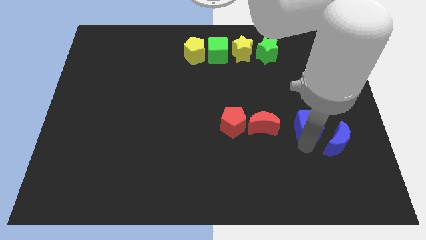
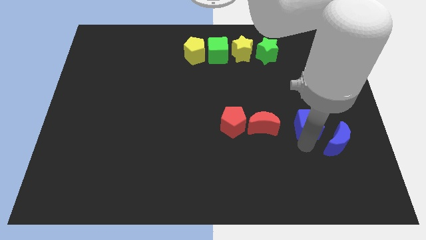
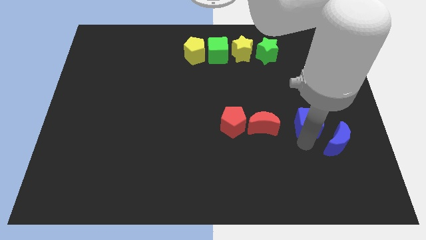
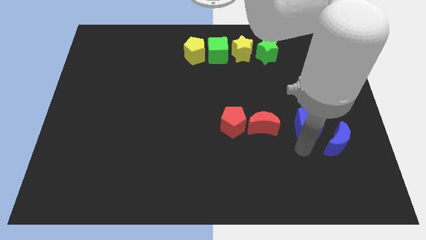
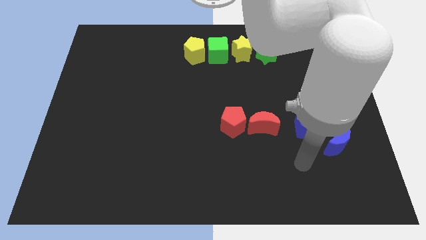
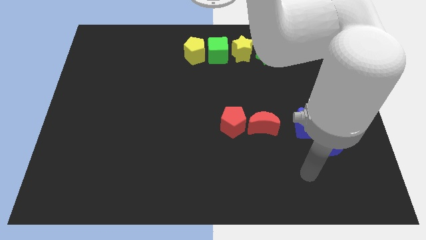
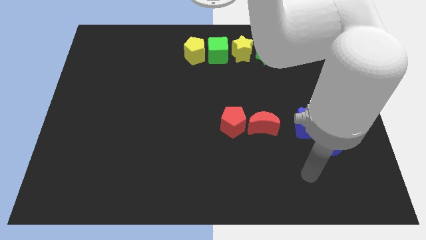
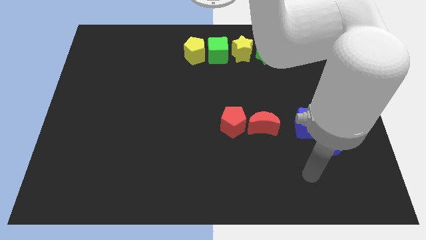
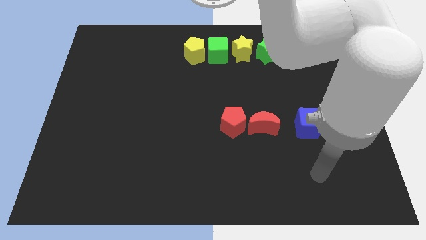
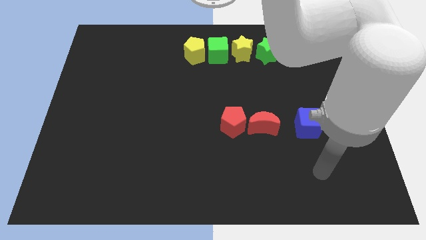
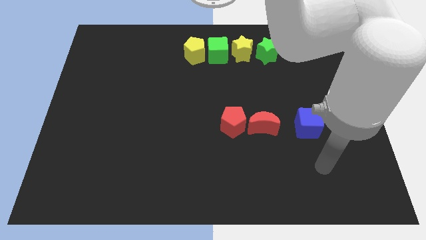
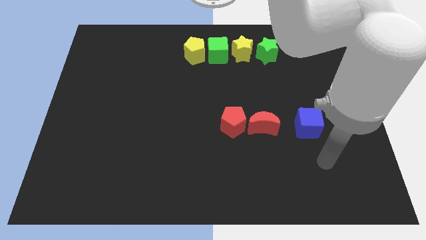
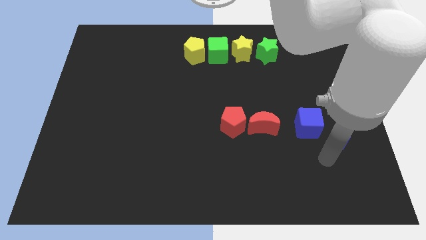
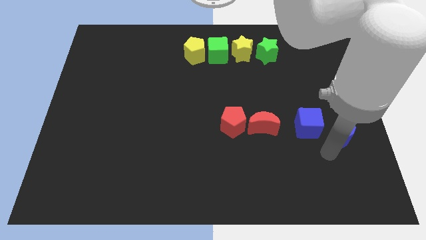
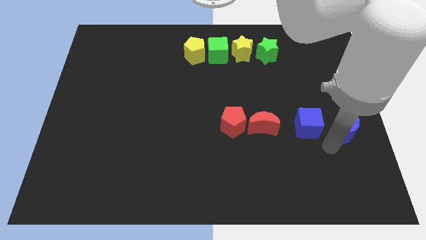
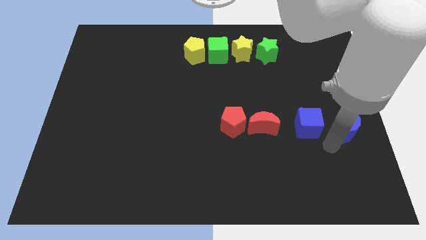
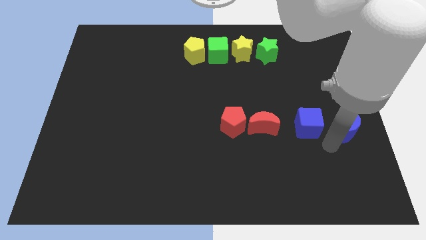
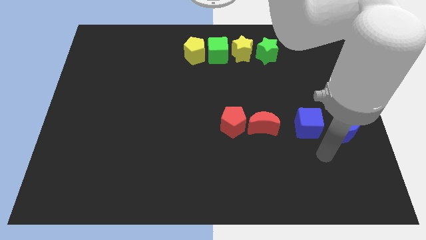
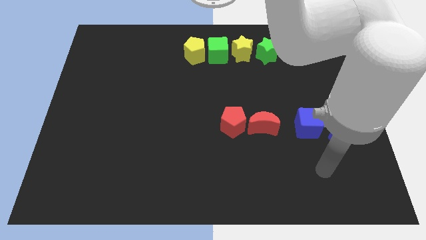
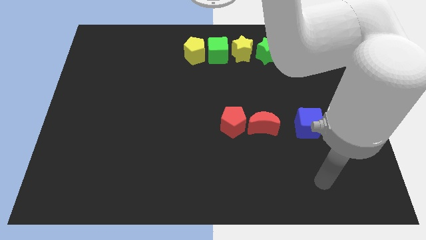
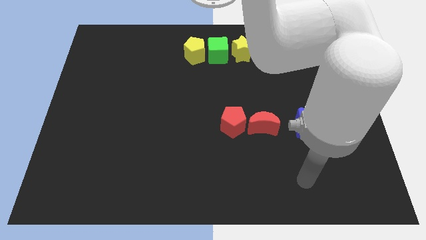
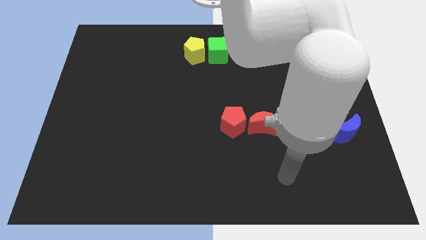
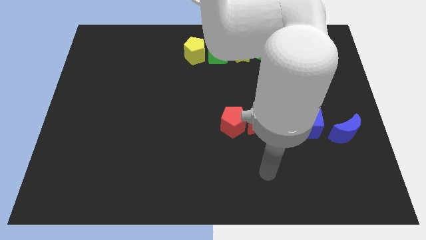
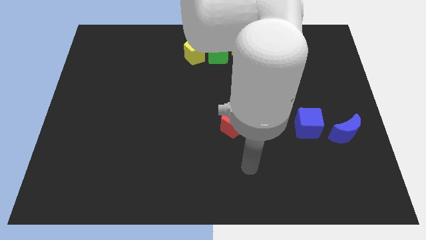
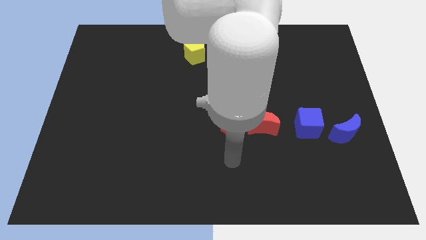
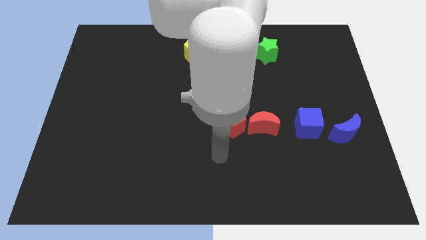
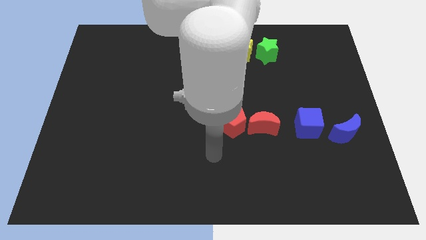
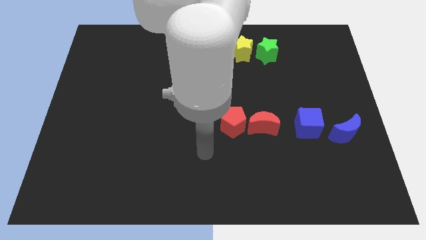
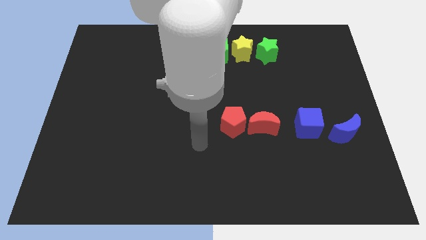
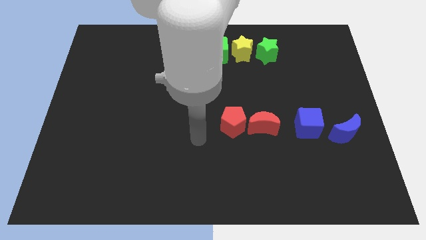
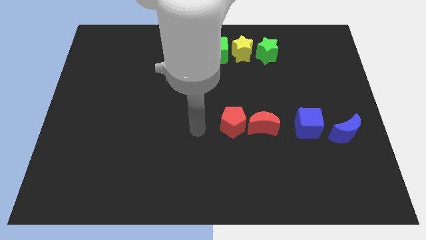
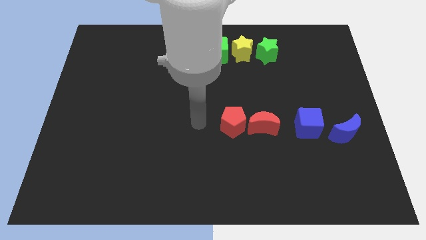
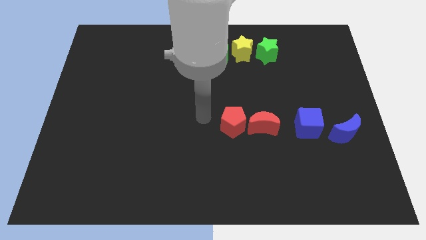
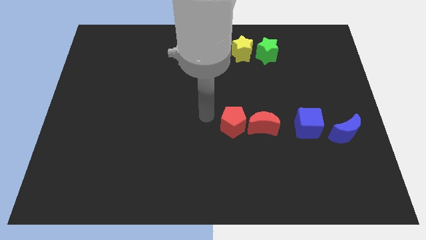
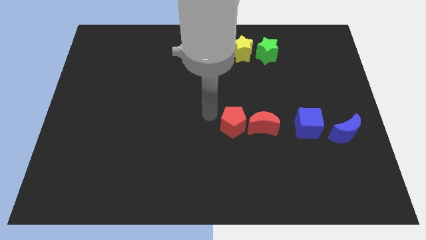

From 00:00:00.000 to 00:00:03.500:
place blue crescent to the right of blue cube

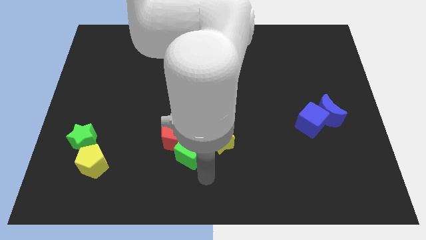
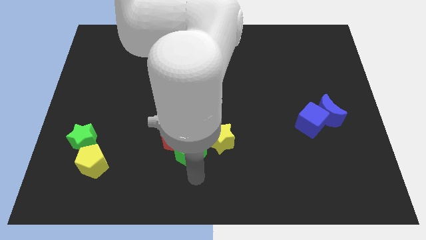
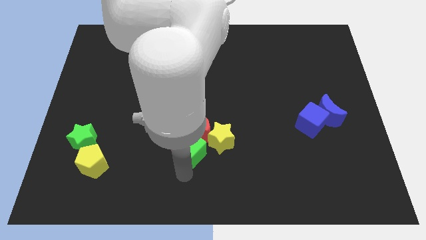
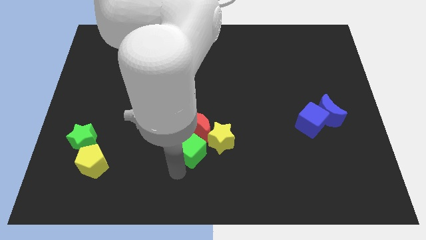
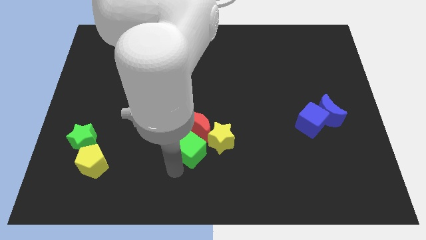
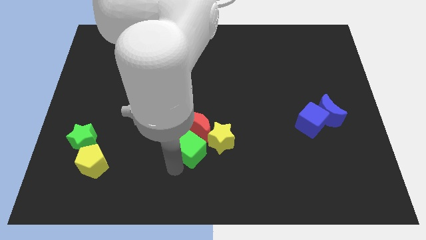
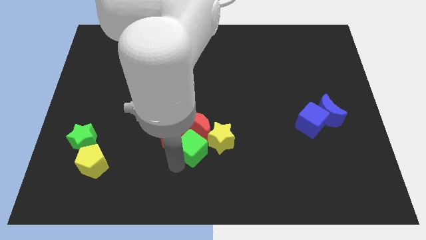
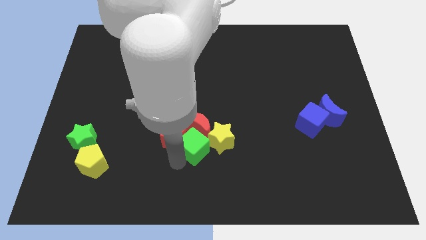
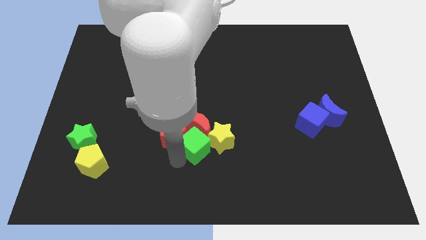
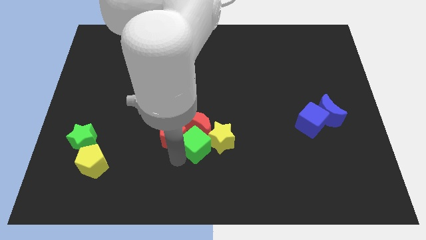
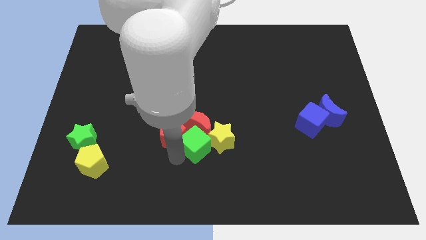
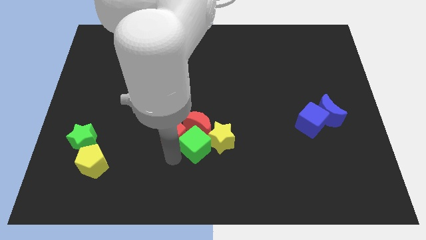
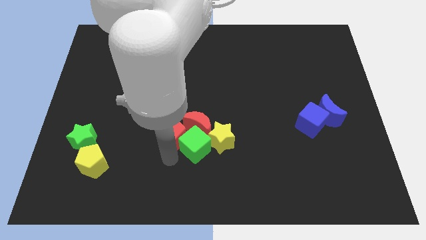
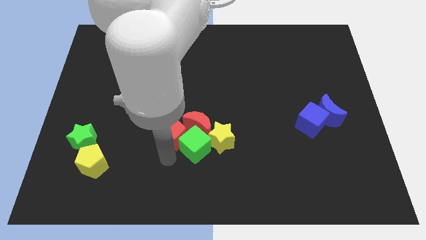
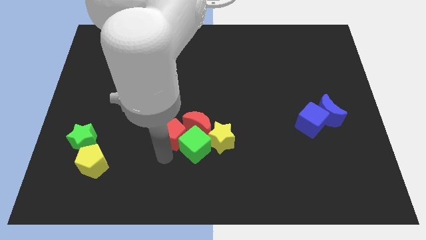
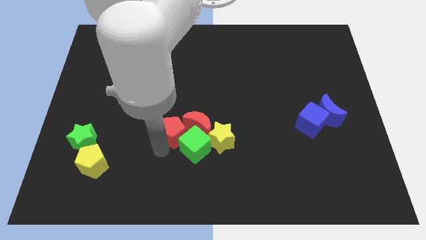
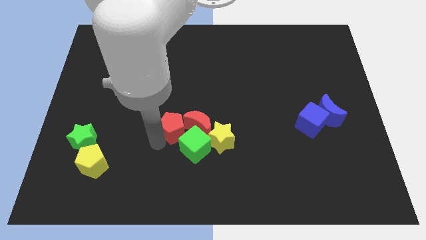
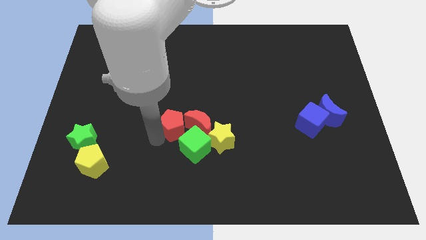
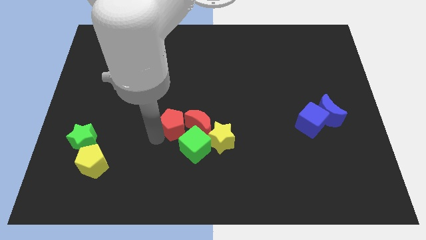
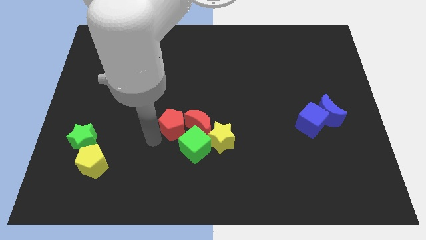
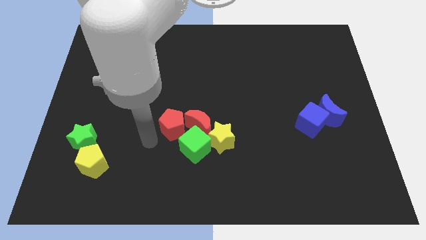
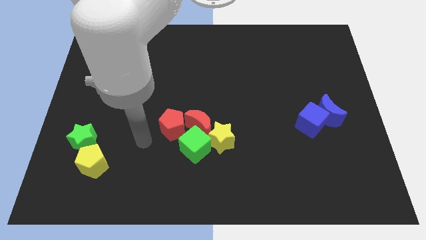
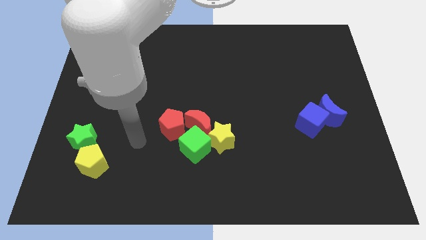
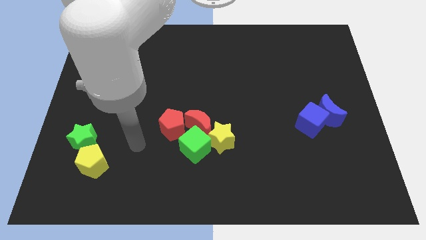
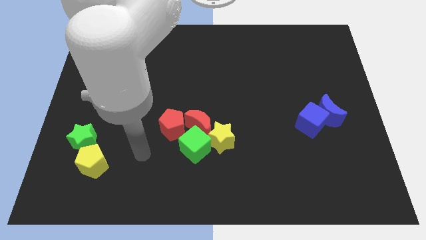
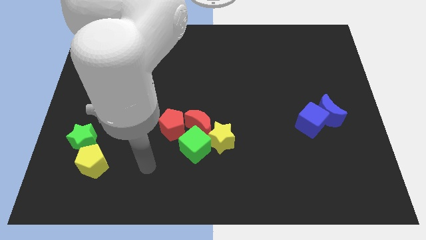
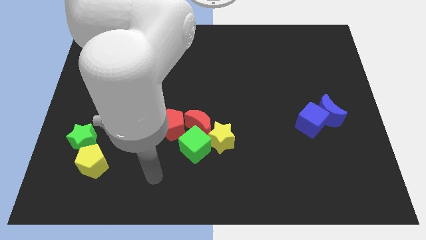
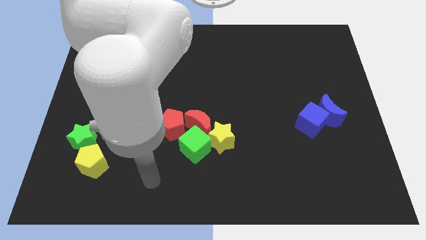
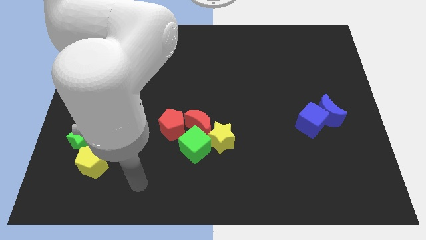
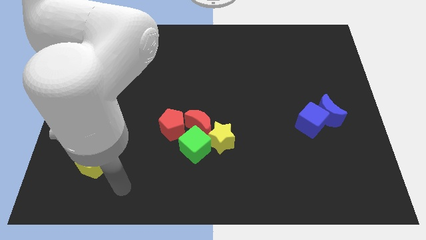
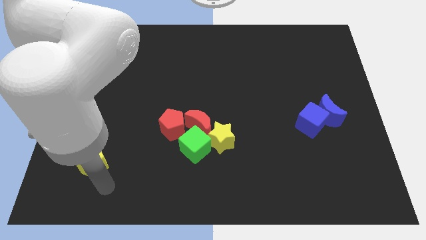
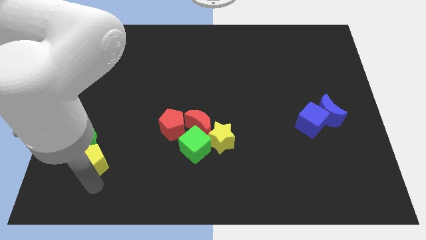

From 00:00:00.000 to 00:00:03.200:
point your hand below the yellow pentagon

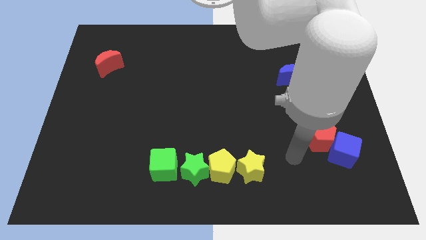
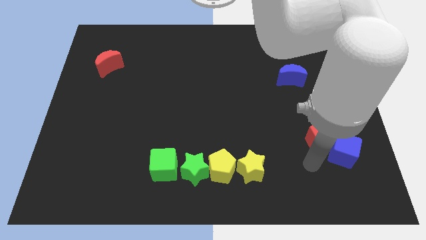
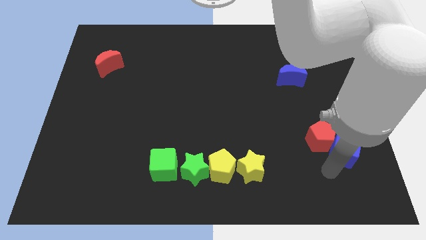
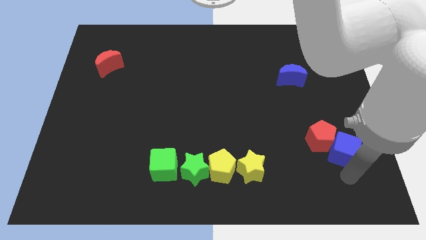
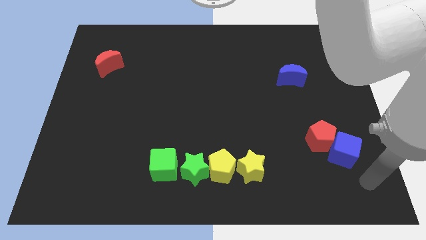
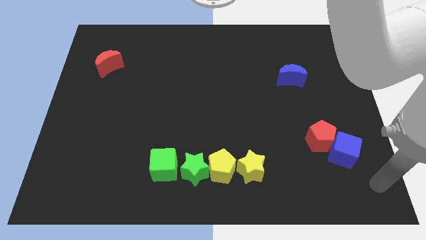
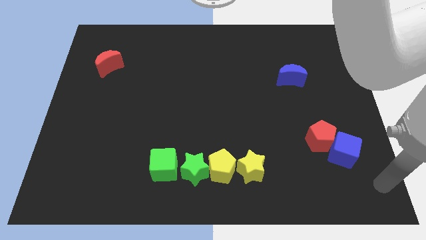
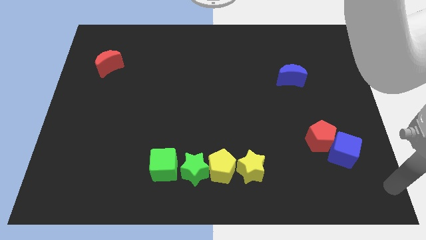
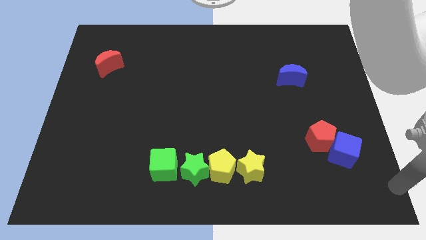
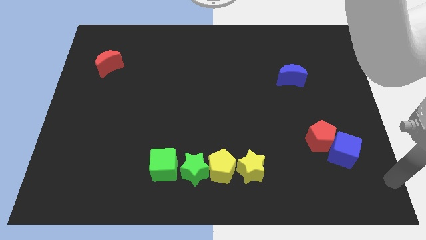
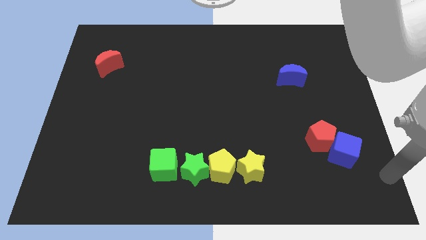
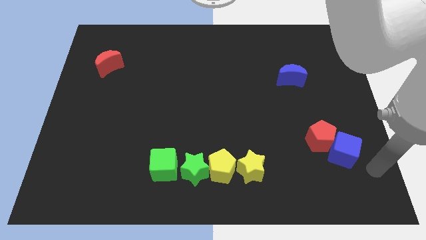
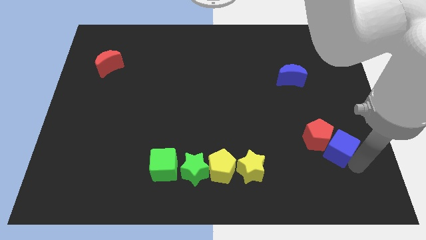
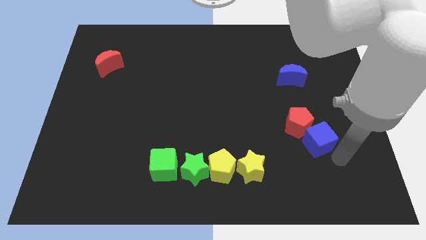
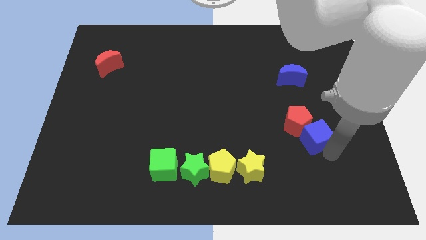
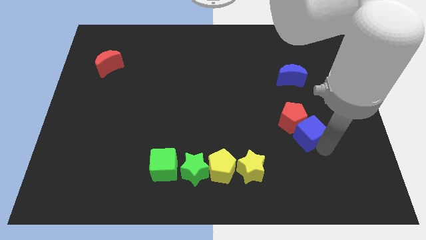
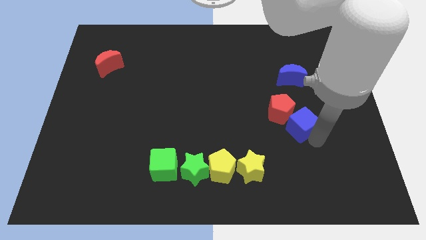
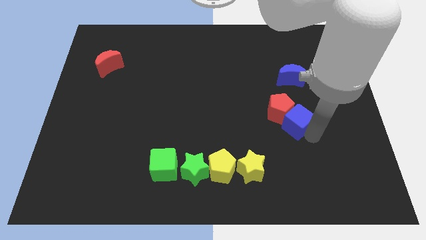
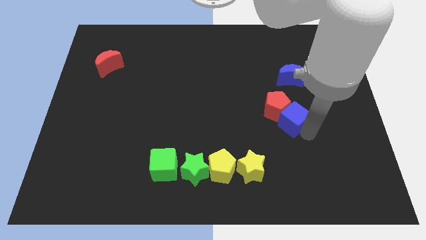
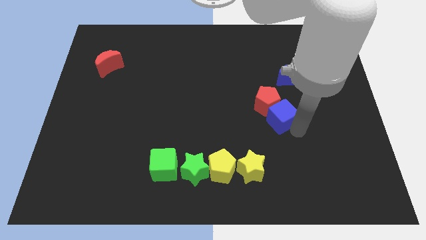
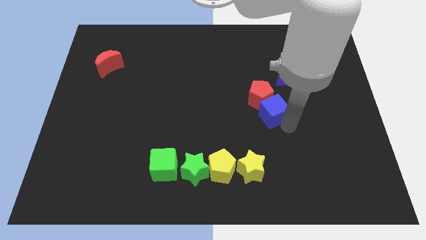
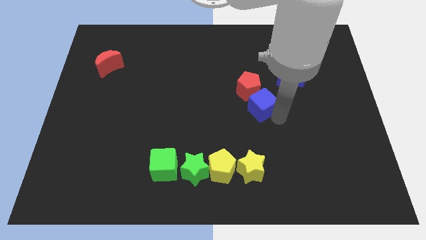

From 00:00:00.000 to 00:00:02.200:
push the blue cube along with the red penatgon towards the top side
